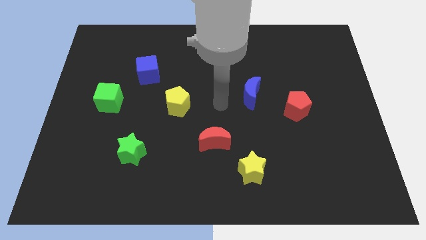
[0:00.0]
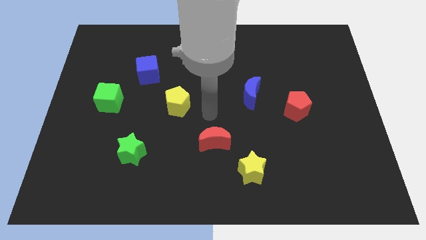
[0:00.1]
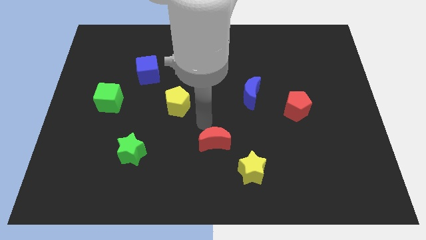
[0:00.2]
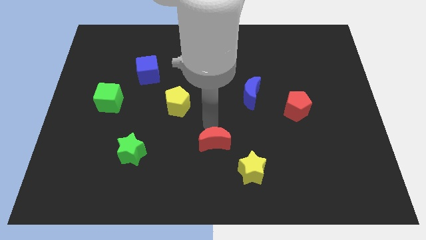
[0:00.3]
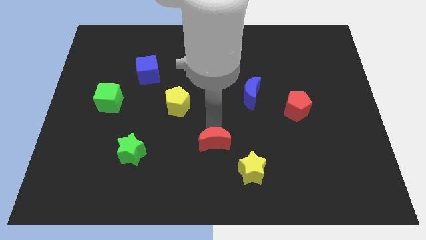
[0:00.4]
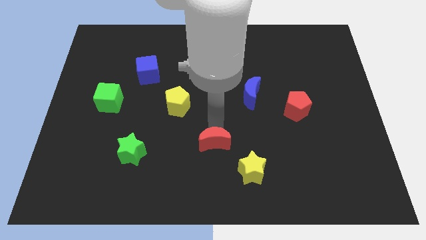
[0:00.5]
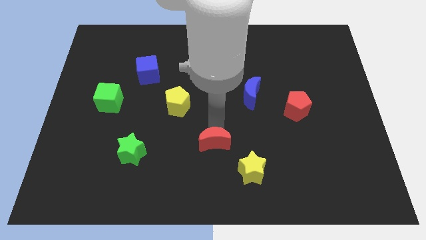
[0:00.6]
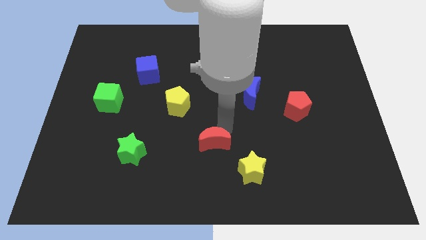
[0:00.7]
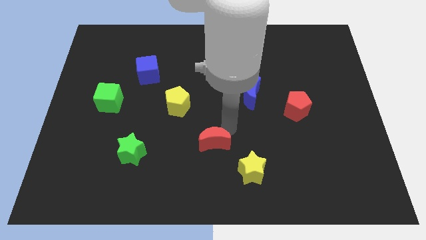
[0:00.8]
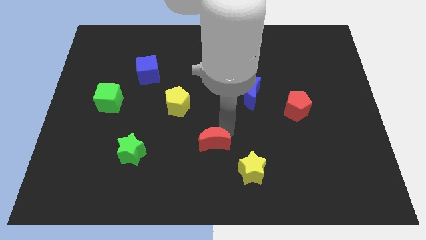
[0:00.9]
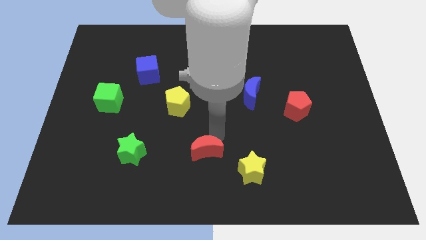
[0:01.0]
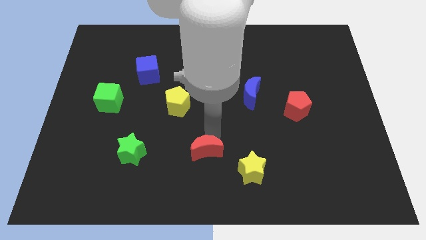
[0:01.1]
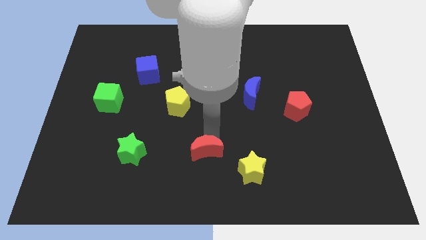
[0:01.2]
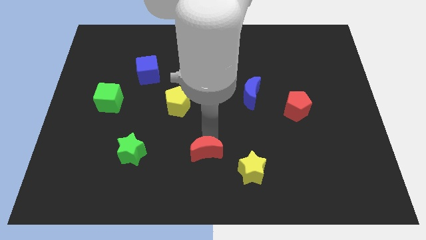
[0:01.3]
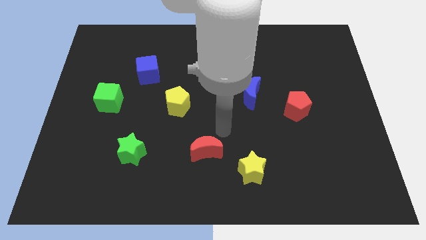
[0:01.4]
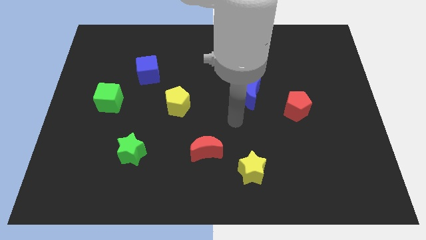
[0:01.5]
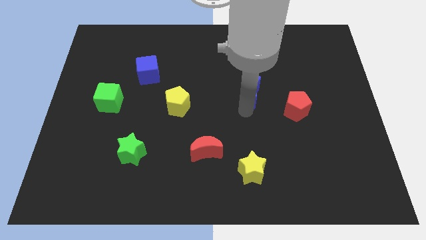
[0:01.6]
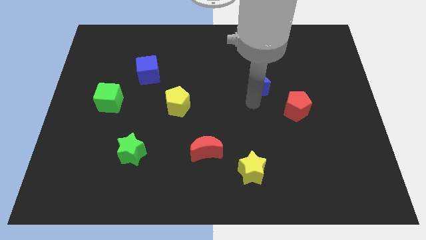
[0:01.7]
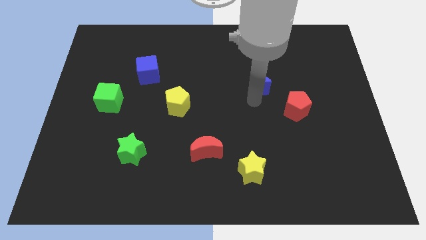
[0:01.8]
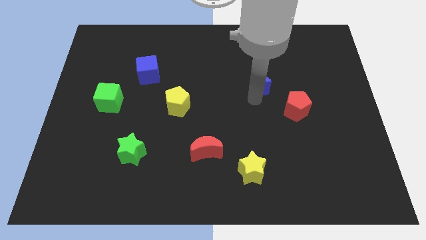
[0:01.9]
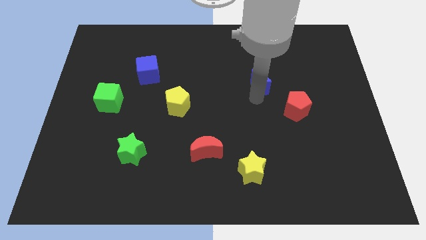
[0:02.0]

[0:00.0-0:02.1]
point your arm below the blue moon

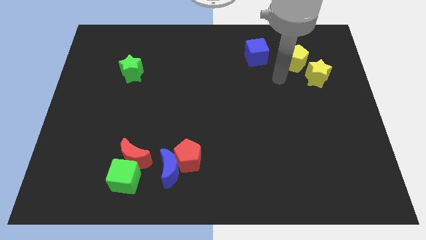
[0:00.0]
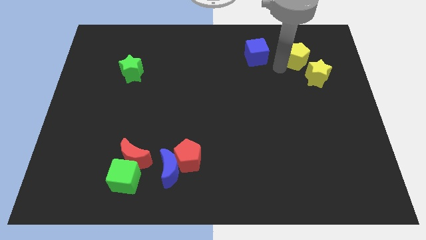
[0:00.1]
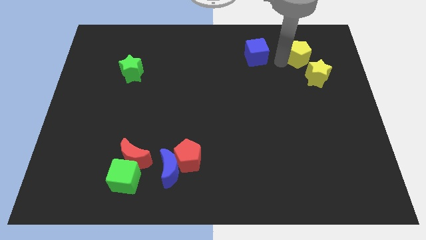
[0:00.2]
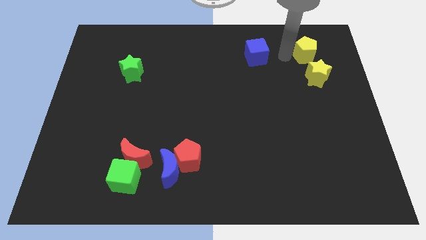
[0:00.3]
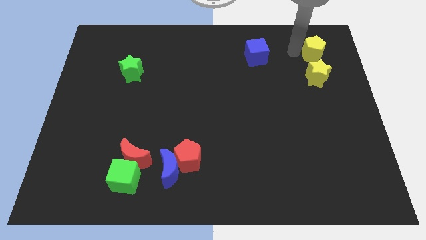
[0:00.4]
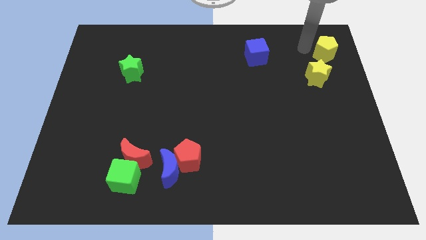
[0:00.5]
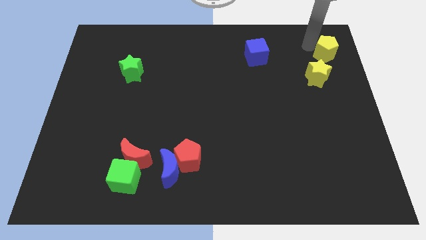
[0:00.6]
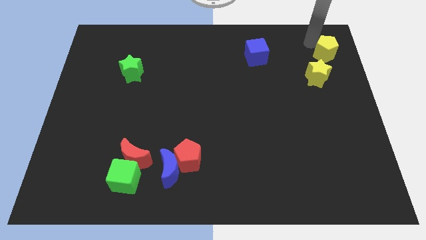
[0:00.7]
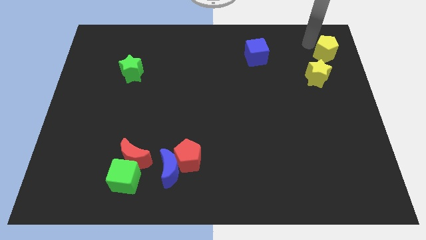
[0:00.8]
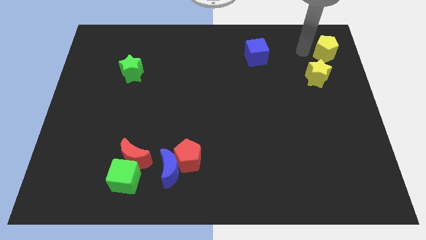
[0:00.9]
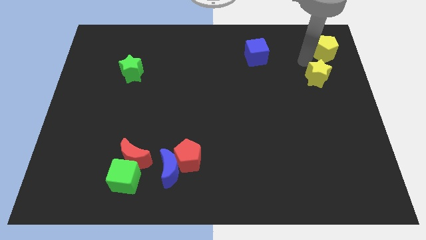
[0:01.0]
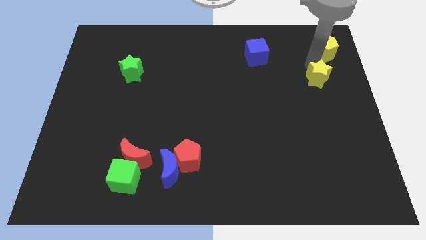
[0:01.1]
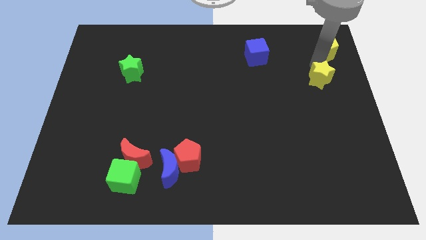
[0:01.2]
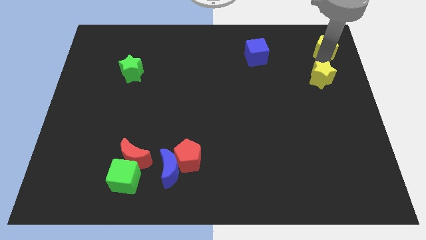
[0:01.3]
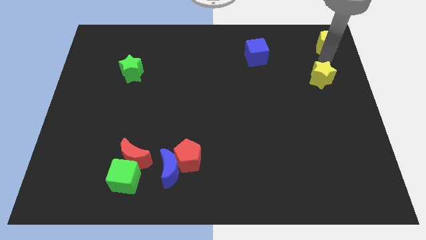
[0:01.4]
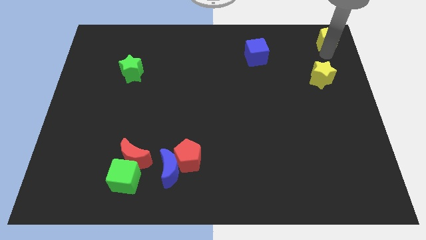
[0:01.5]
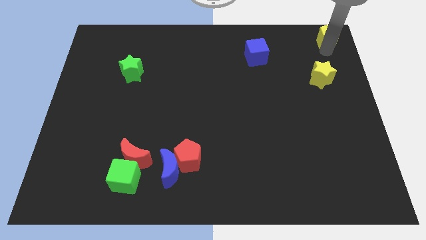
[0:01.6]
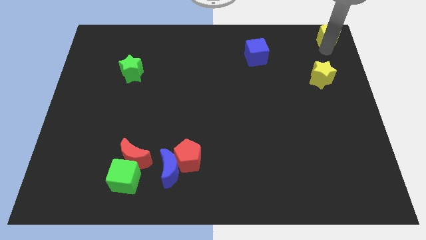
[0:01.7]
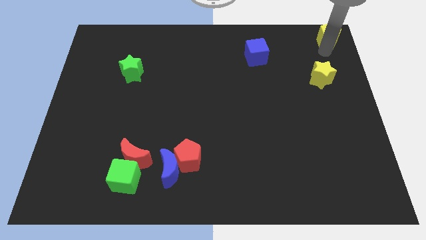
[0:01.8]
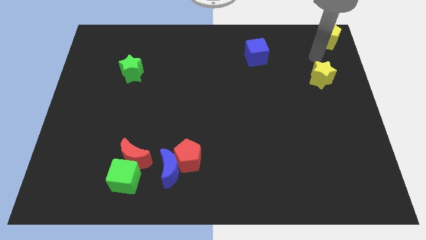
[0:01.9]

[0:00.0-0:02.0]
move the yellow pentagon to the top right corner of the board

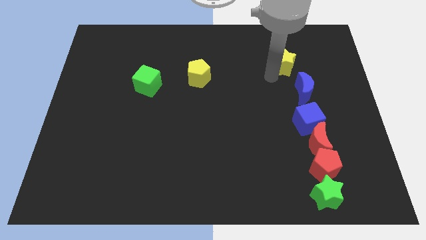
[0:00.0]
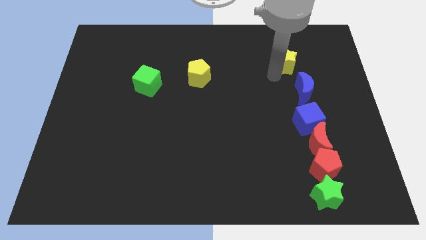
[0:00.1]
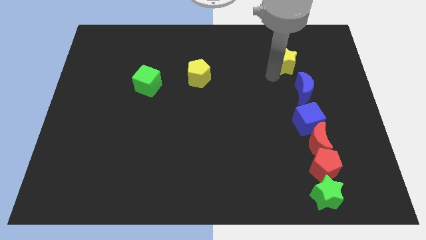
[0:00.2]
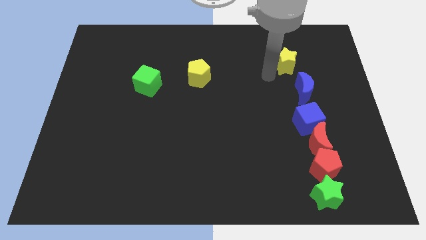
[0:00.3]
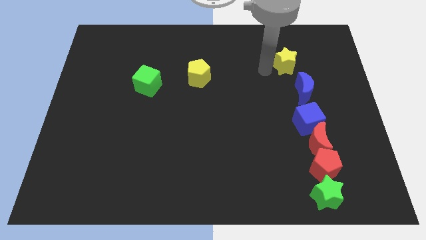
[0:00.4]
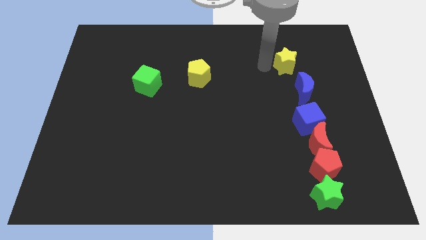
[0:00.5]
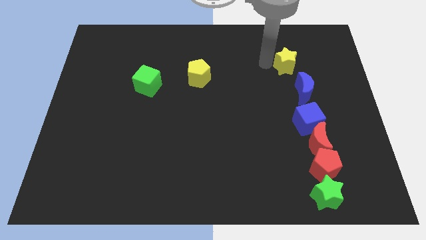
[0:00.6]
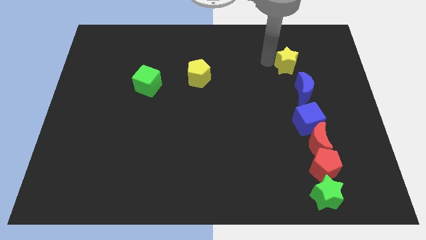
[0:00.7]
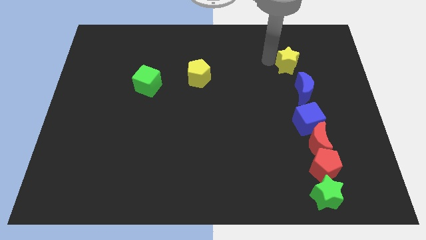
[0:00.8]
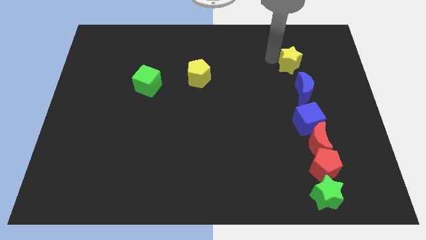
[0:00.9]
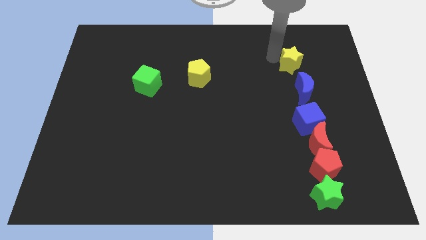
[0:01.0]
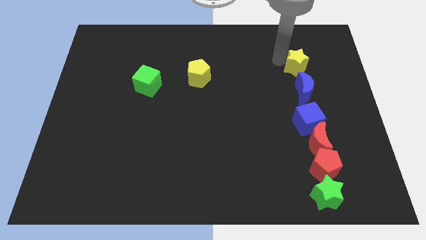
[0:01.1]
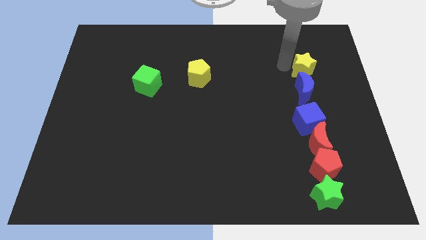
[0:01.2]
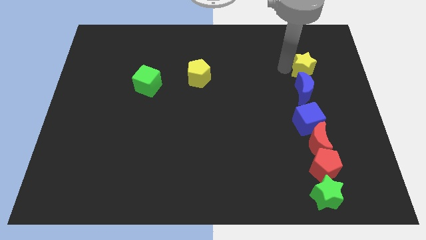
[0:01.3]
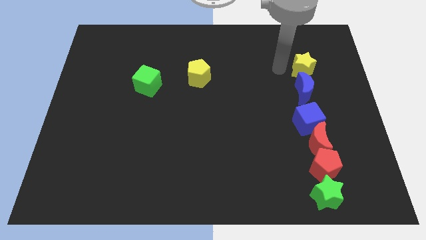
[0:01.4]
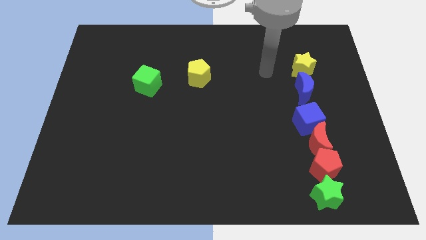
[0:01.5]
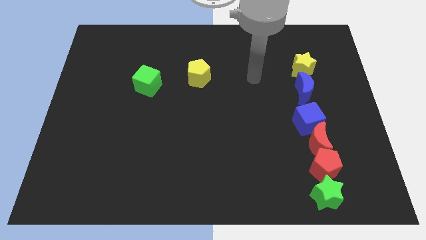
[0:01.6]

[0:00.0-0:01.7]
place the yellow star above to the blue crescent

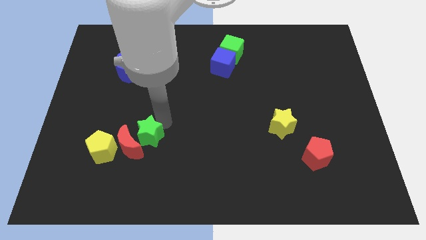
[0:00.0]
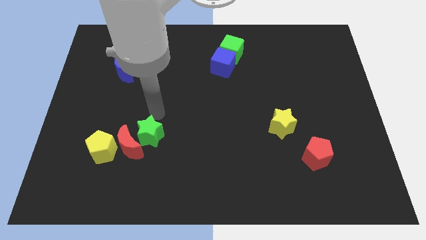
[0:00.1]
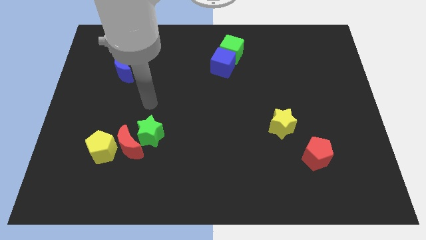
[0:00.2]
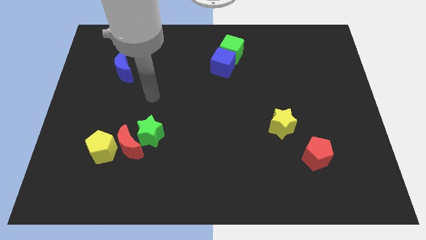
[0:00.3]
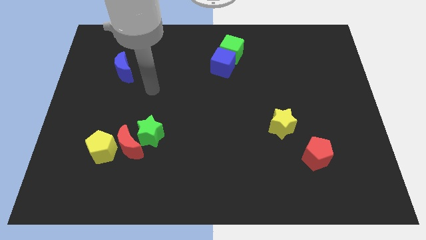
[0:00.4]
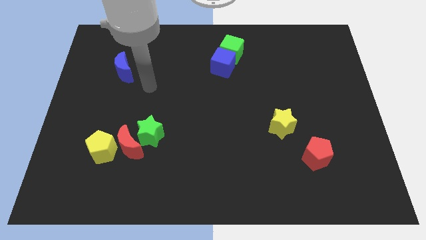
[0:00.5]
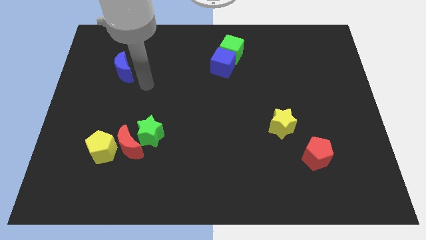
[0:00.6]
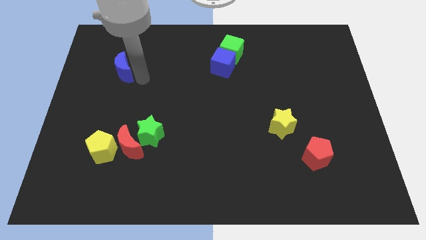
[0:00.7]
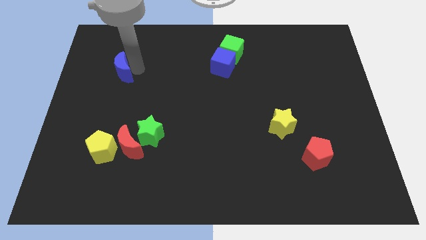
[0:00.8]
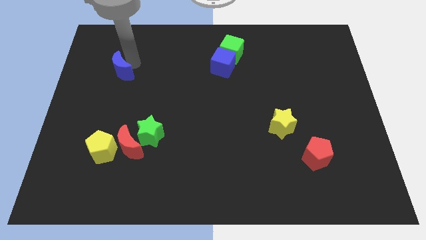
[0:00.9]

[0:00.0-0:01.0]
go and touch the right side of the blue crescent

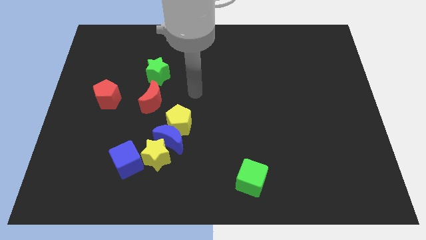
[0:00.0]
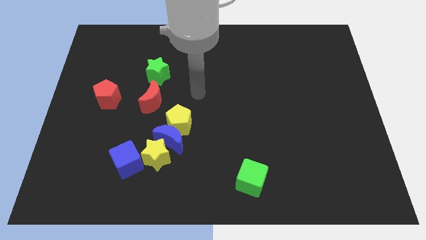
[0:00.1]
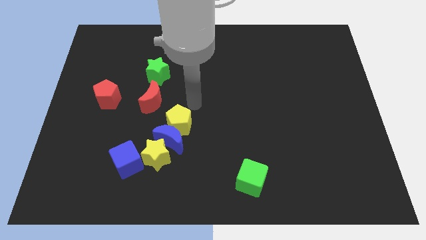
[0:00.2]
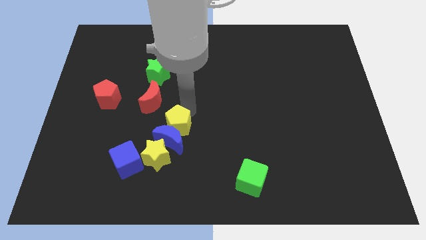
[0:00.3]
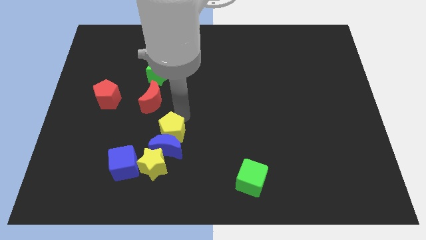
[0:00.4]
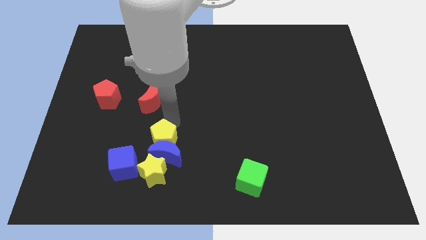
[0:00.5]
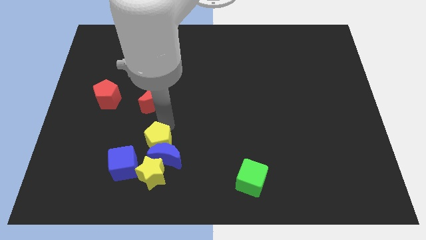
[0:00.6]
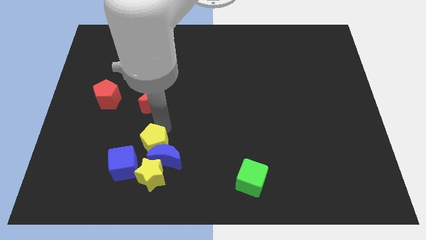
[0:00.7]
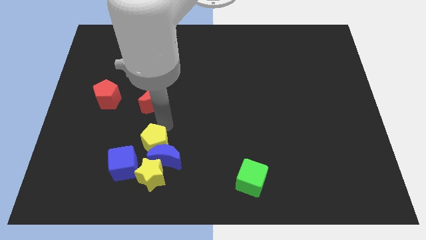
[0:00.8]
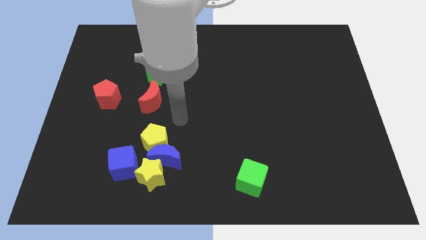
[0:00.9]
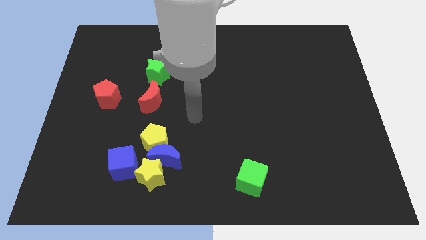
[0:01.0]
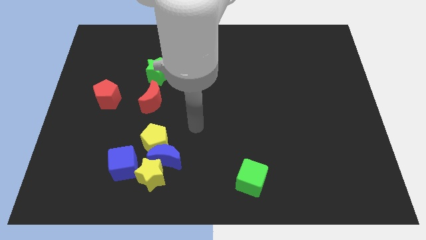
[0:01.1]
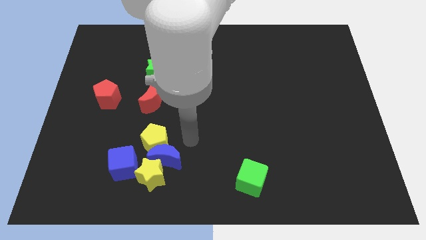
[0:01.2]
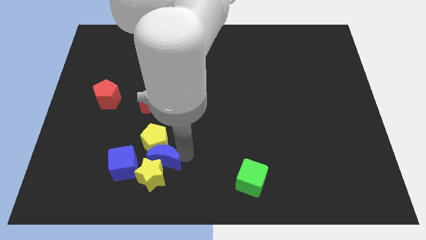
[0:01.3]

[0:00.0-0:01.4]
put the yellow pentagon underneath the red crescent

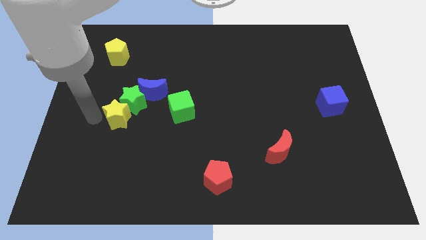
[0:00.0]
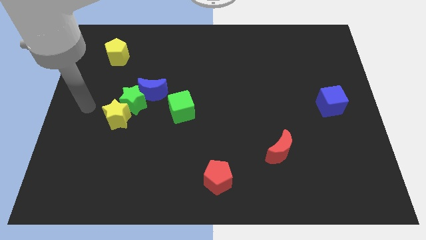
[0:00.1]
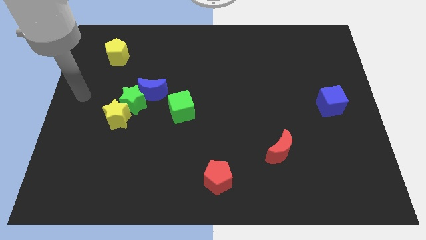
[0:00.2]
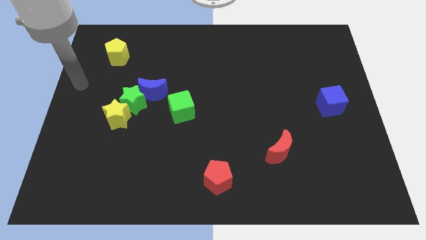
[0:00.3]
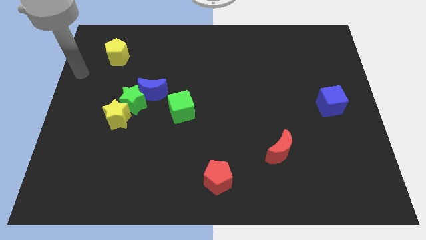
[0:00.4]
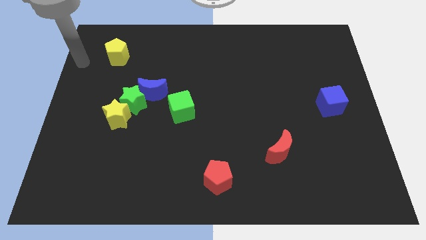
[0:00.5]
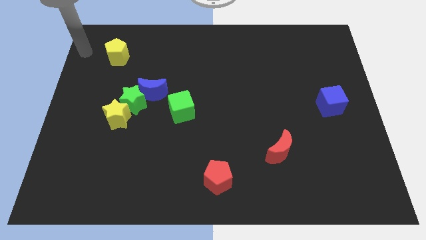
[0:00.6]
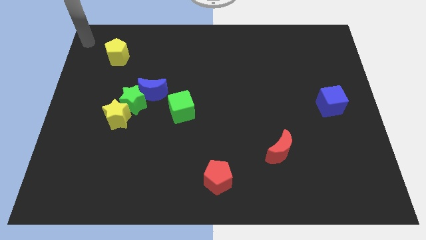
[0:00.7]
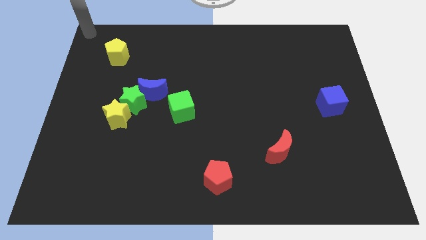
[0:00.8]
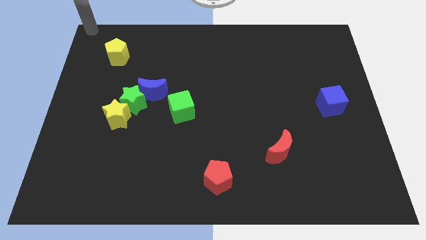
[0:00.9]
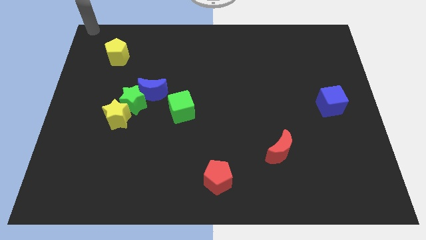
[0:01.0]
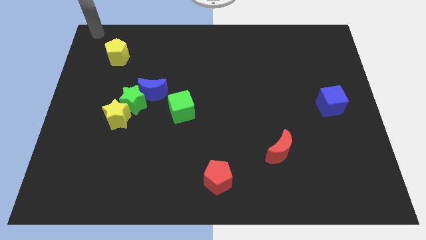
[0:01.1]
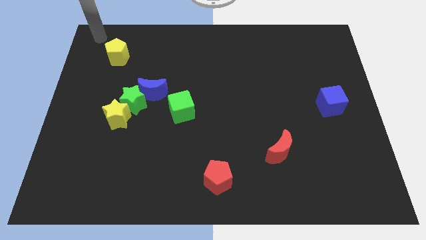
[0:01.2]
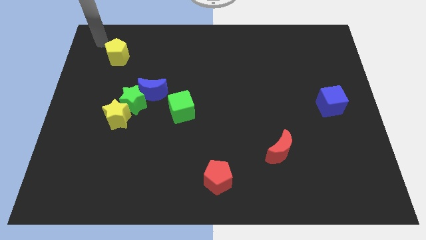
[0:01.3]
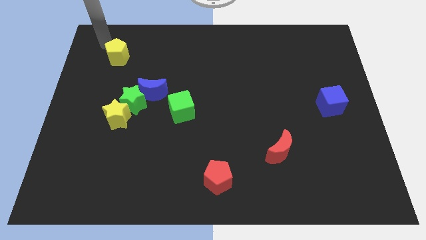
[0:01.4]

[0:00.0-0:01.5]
move your arm towards the yellow pentagon
